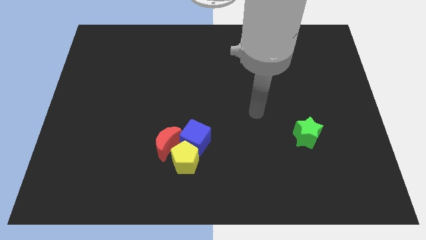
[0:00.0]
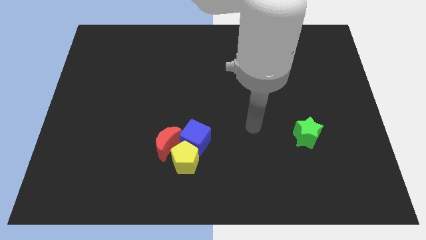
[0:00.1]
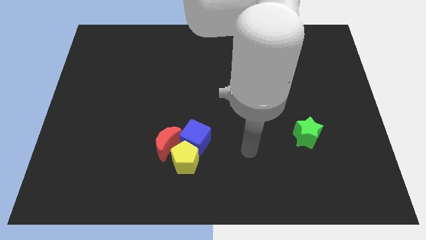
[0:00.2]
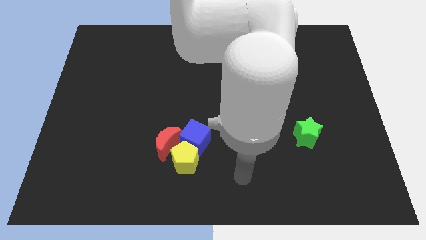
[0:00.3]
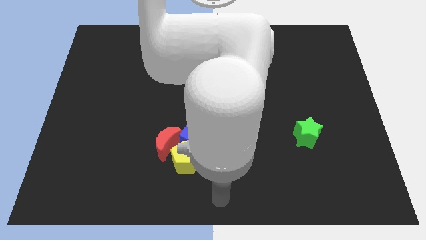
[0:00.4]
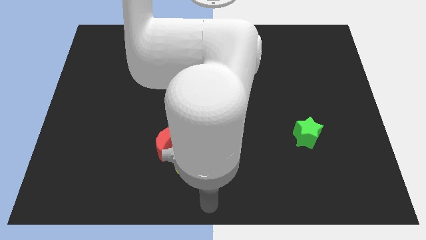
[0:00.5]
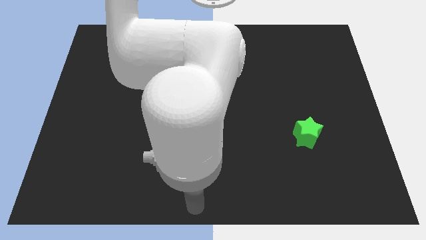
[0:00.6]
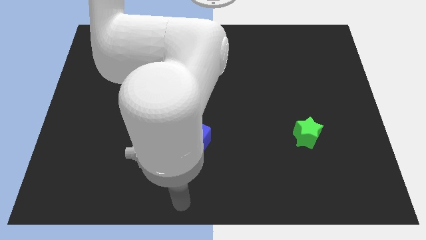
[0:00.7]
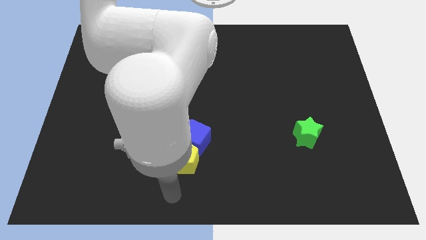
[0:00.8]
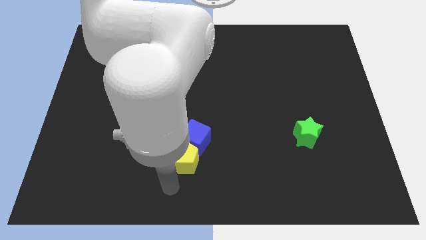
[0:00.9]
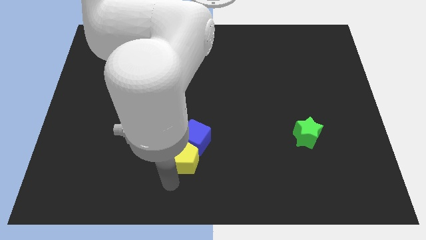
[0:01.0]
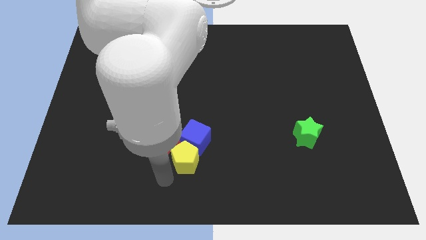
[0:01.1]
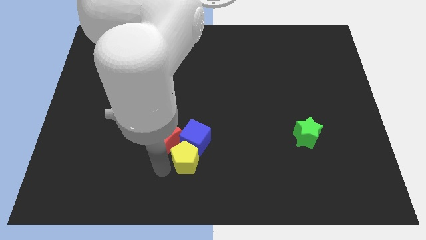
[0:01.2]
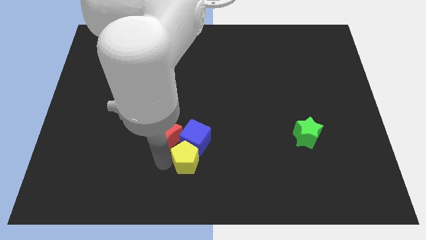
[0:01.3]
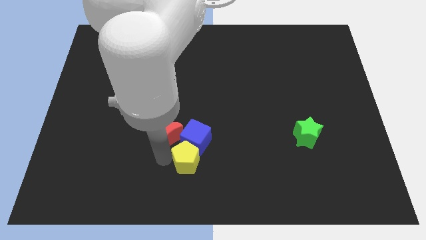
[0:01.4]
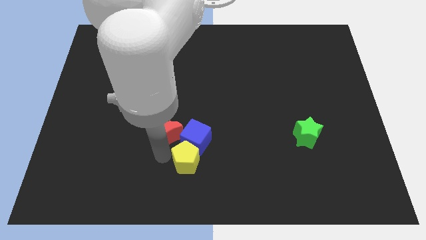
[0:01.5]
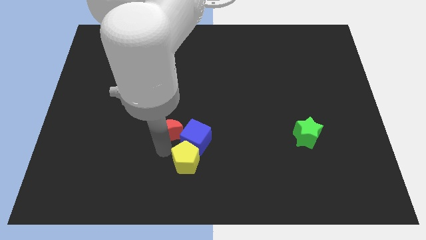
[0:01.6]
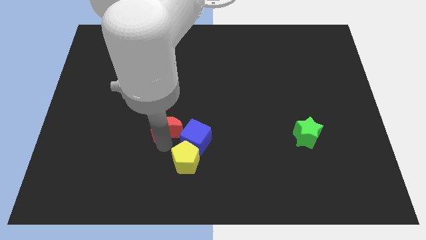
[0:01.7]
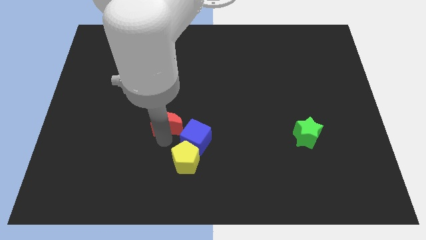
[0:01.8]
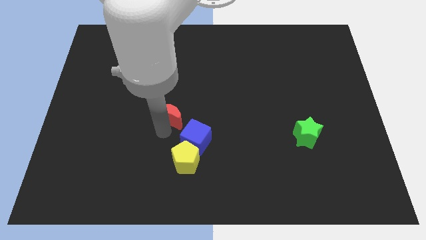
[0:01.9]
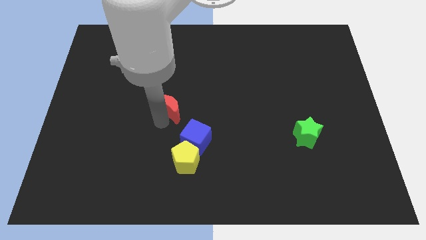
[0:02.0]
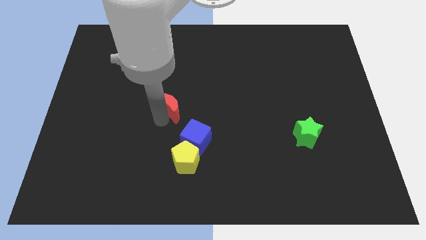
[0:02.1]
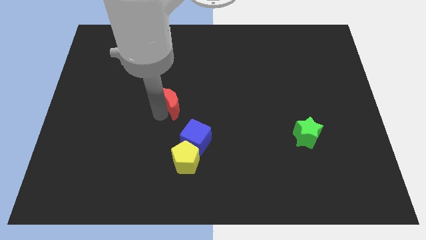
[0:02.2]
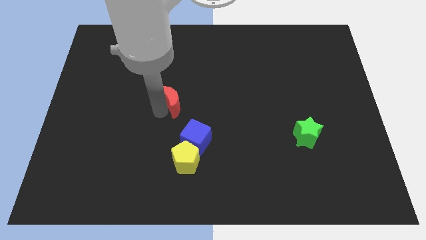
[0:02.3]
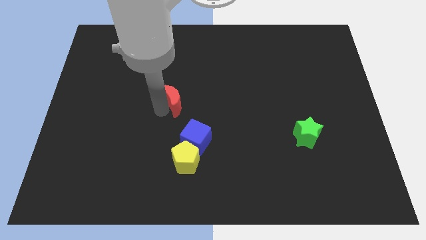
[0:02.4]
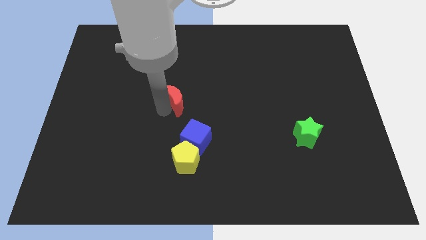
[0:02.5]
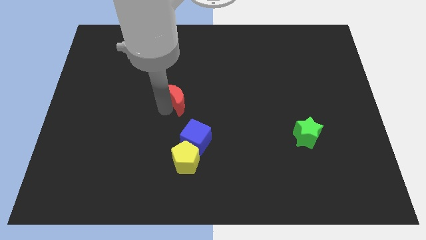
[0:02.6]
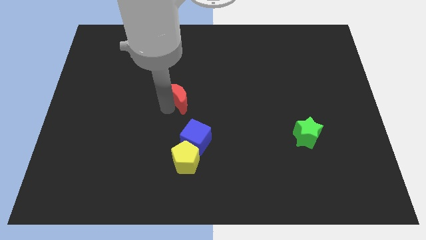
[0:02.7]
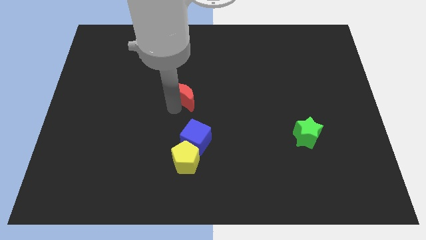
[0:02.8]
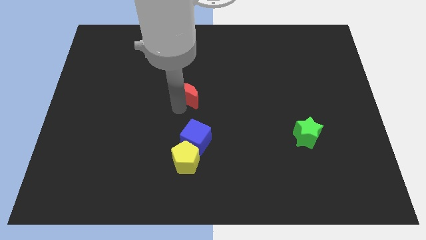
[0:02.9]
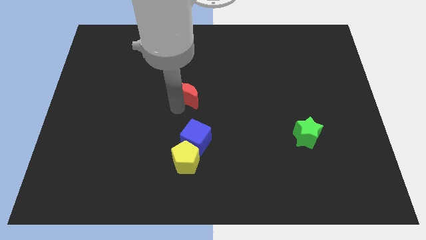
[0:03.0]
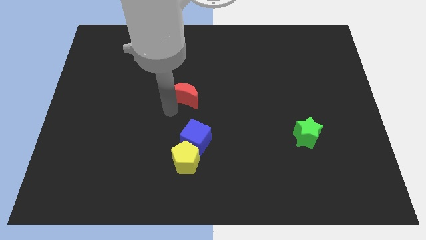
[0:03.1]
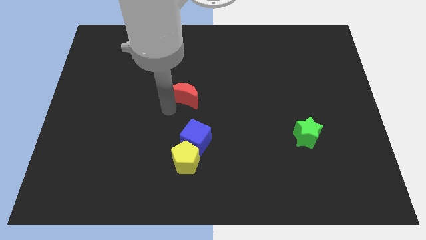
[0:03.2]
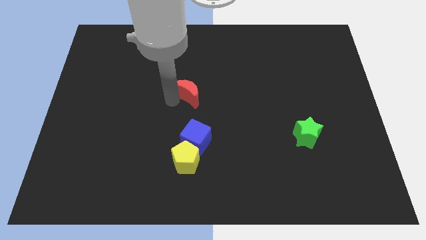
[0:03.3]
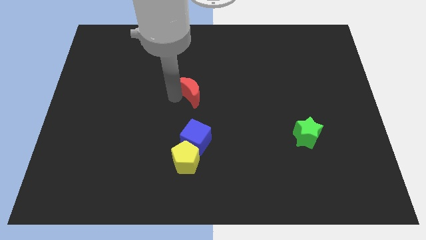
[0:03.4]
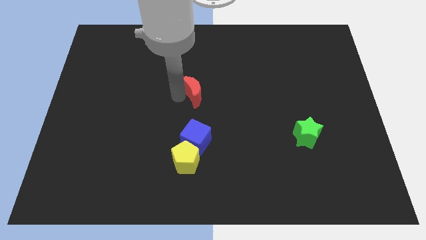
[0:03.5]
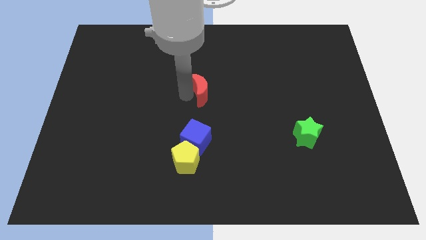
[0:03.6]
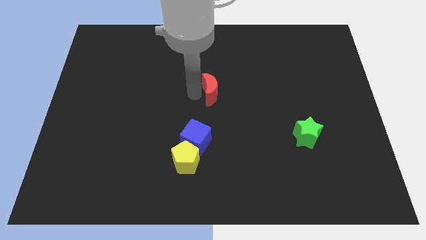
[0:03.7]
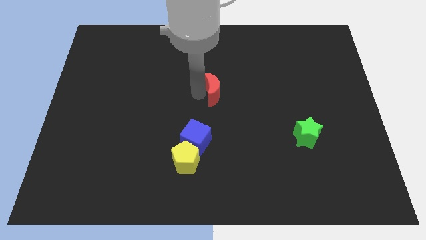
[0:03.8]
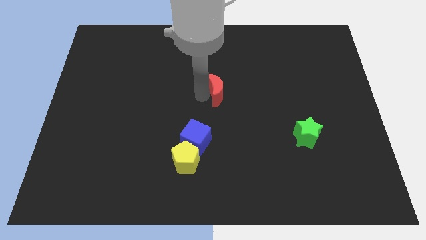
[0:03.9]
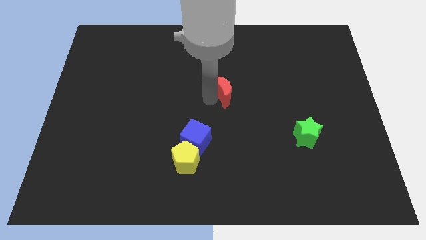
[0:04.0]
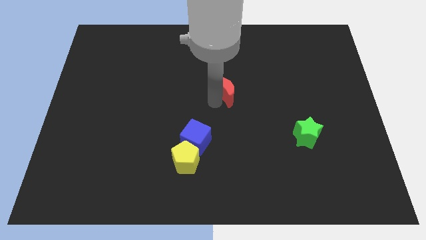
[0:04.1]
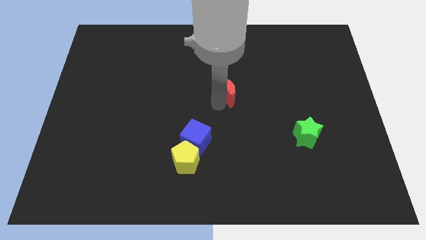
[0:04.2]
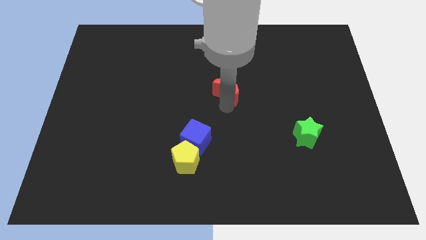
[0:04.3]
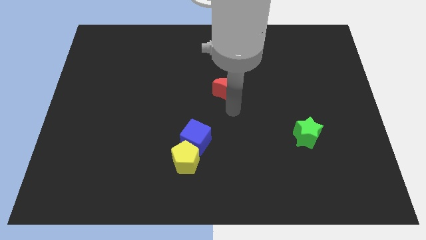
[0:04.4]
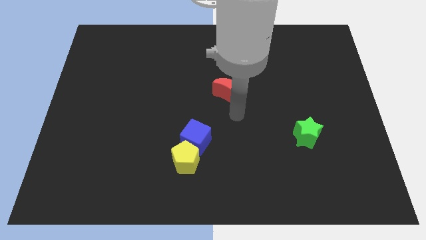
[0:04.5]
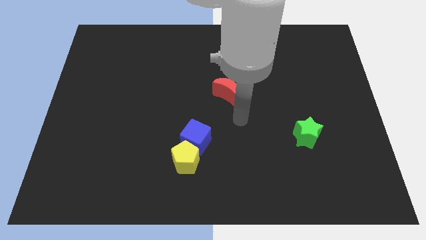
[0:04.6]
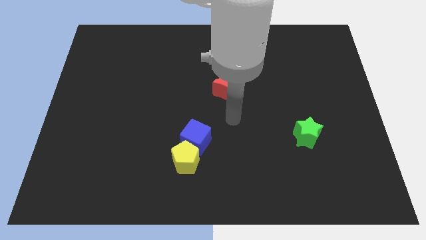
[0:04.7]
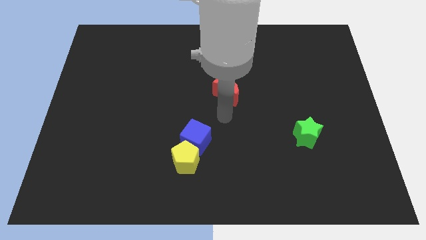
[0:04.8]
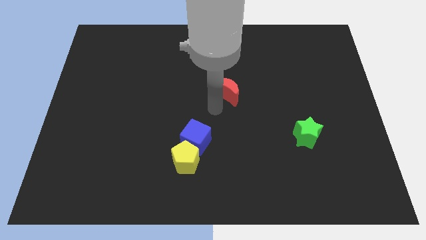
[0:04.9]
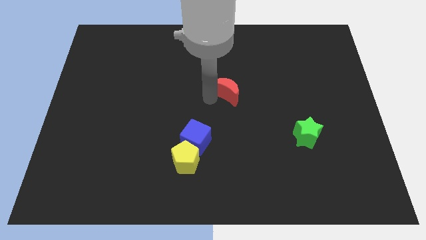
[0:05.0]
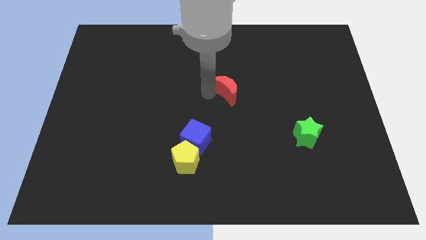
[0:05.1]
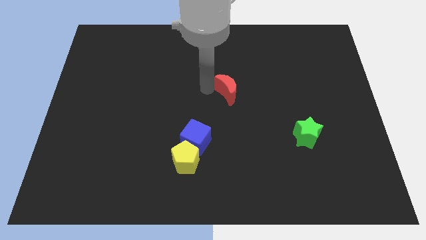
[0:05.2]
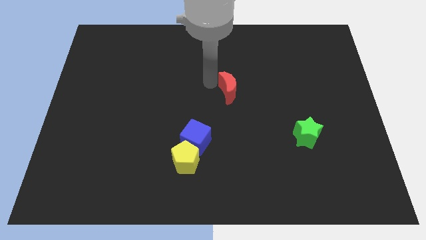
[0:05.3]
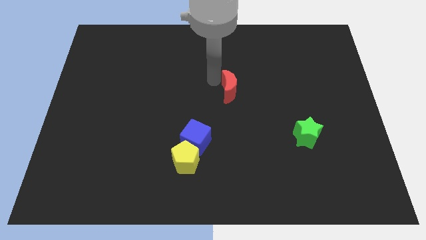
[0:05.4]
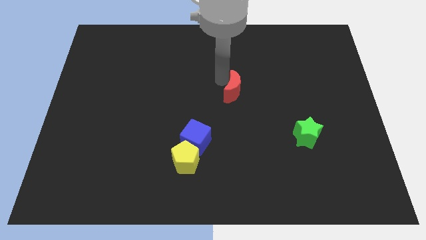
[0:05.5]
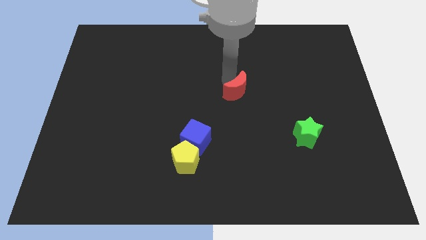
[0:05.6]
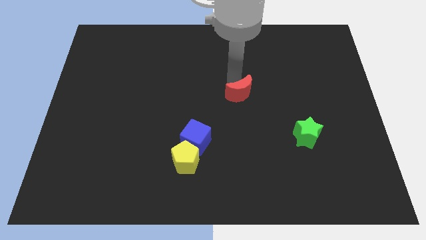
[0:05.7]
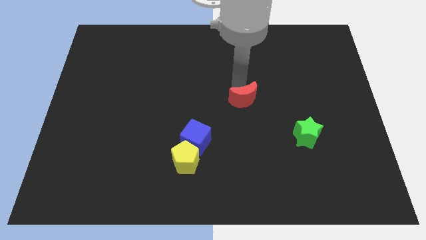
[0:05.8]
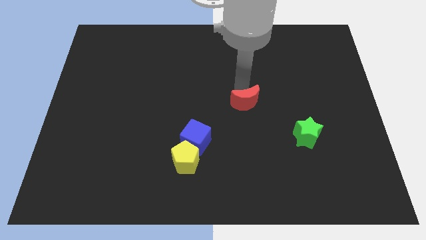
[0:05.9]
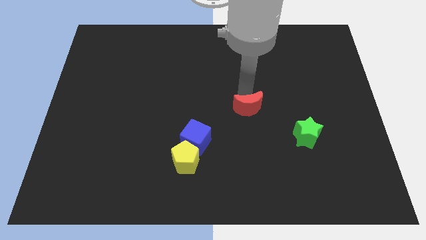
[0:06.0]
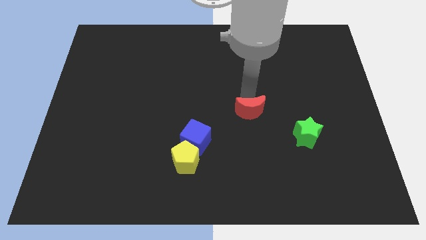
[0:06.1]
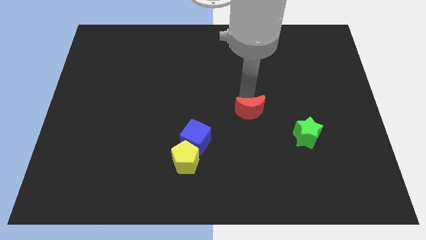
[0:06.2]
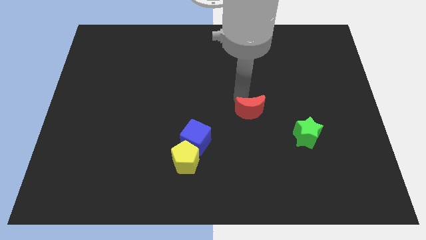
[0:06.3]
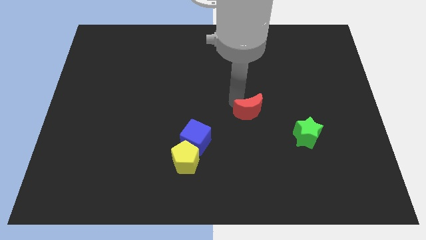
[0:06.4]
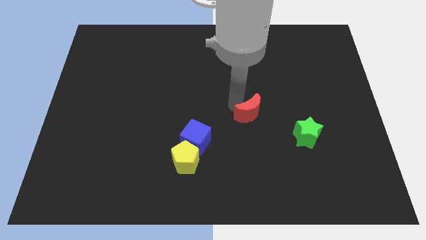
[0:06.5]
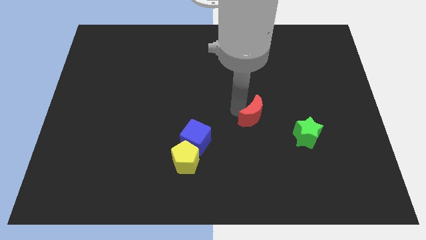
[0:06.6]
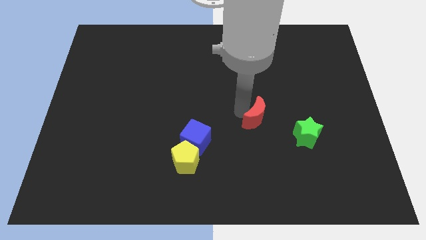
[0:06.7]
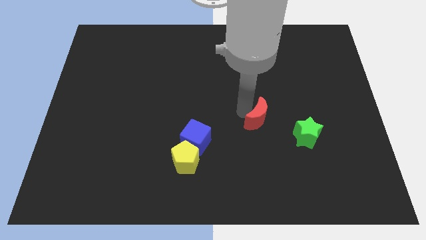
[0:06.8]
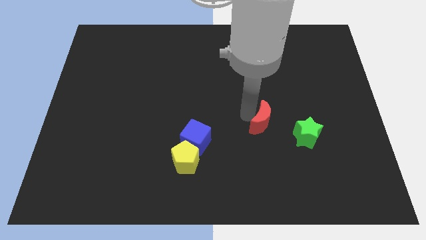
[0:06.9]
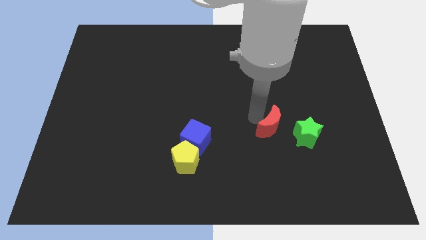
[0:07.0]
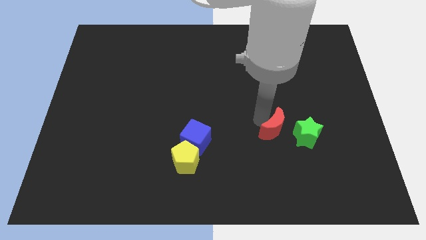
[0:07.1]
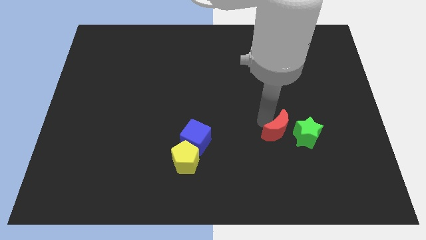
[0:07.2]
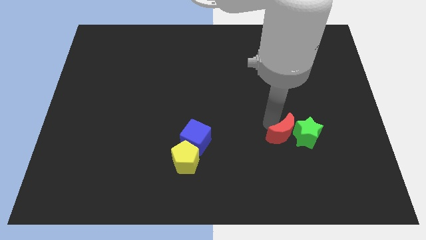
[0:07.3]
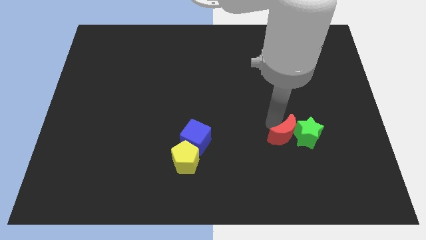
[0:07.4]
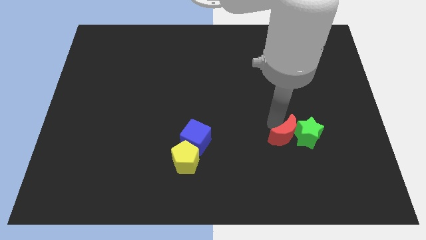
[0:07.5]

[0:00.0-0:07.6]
put the moon to the star

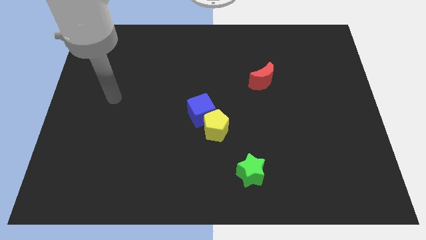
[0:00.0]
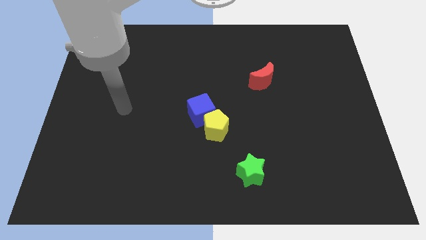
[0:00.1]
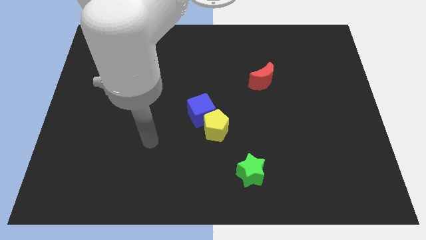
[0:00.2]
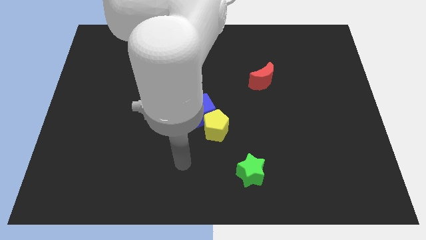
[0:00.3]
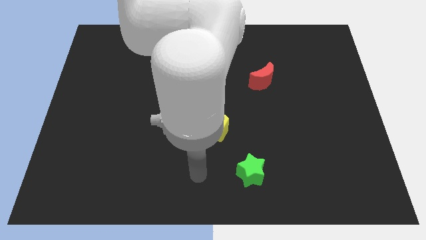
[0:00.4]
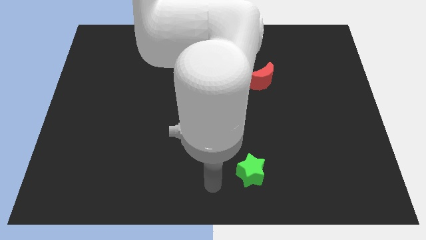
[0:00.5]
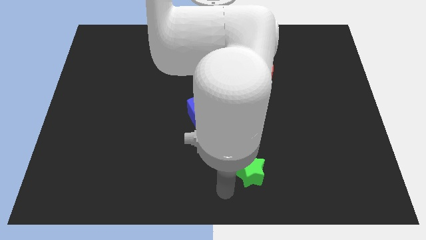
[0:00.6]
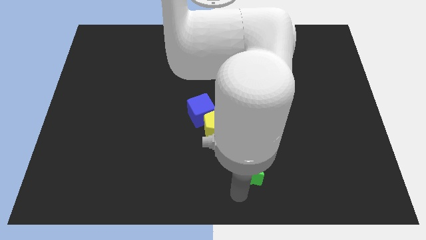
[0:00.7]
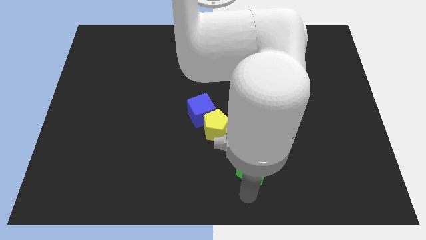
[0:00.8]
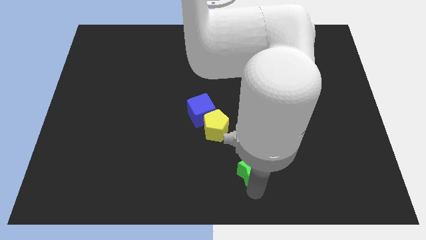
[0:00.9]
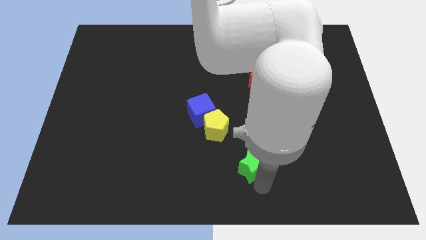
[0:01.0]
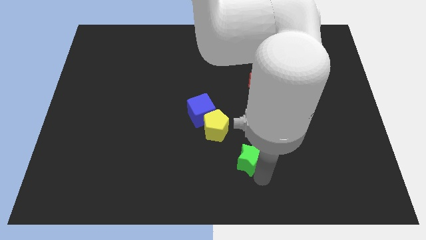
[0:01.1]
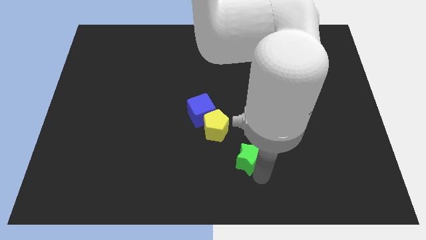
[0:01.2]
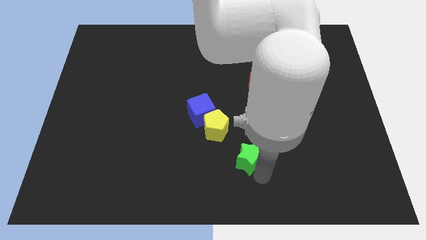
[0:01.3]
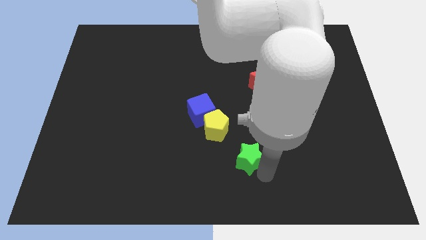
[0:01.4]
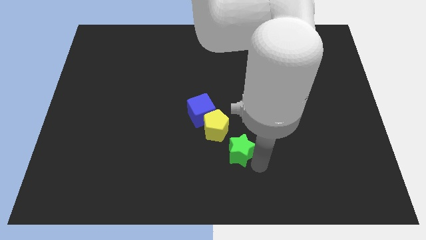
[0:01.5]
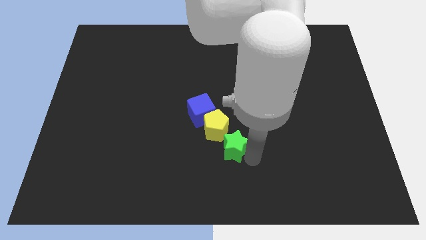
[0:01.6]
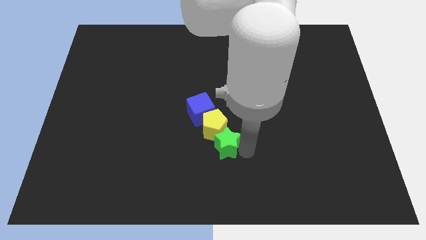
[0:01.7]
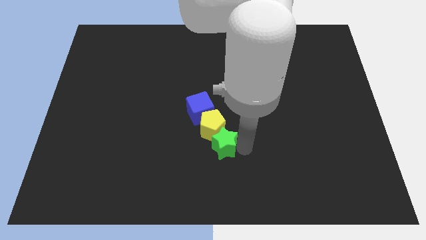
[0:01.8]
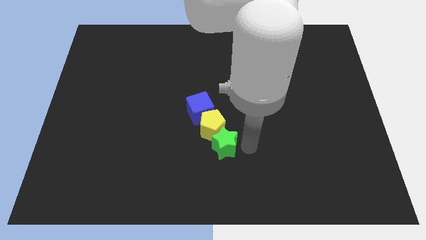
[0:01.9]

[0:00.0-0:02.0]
slide the star next to the pentagon
